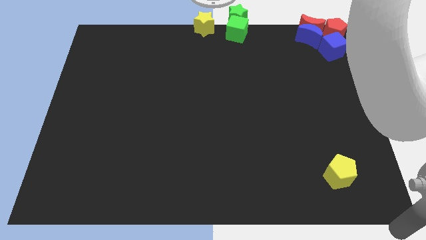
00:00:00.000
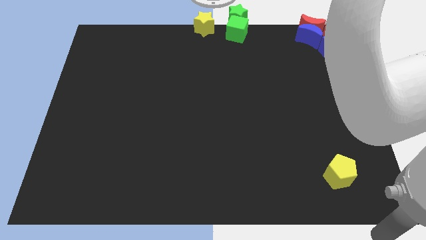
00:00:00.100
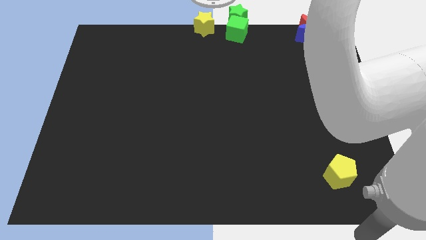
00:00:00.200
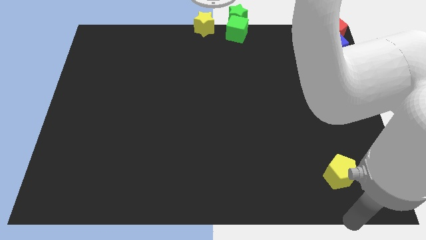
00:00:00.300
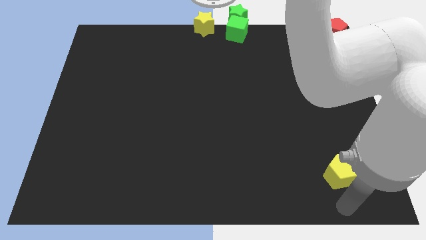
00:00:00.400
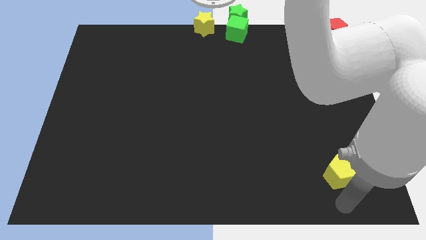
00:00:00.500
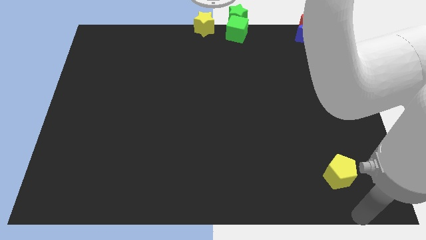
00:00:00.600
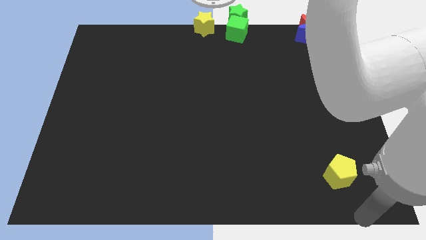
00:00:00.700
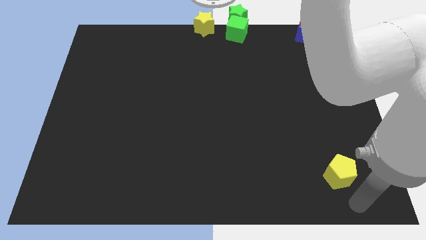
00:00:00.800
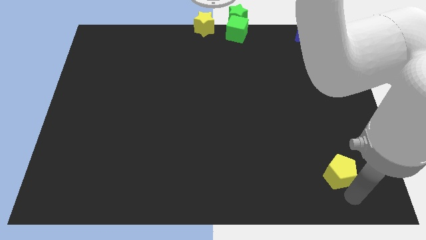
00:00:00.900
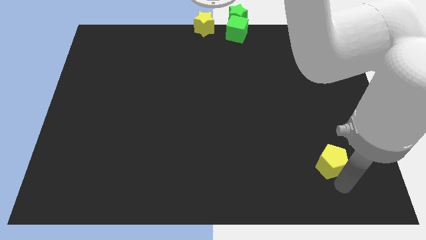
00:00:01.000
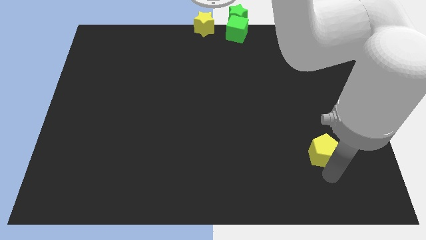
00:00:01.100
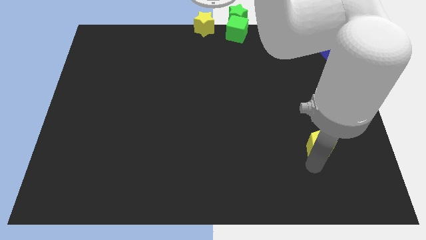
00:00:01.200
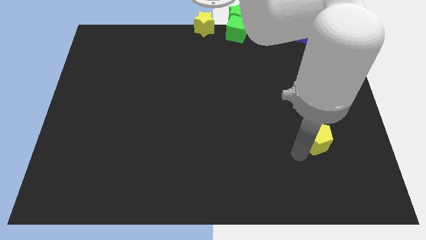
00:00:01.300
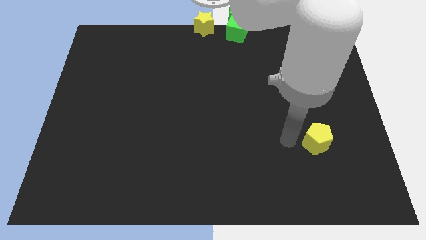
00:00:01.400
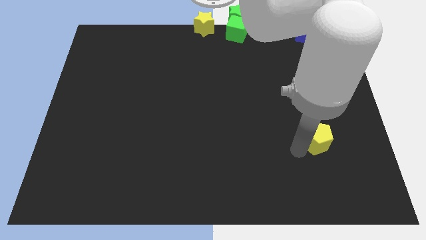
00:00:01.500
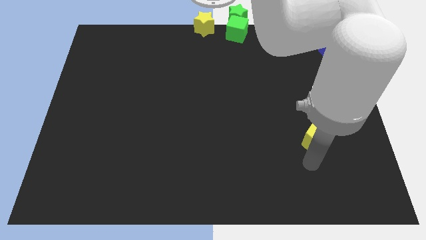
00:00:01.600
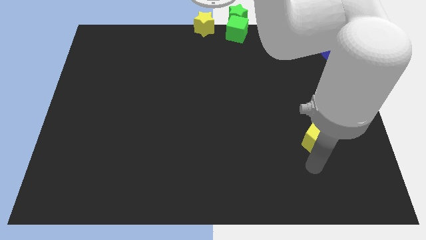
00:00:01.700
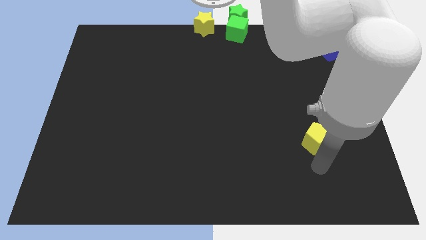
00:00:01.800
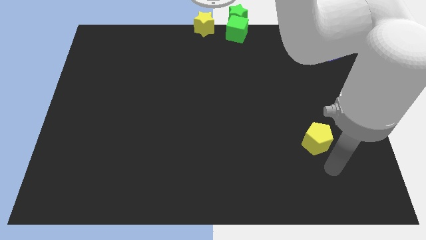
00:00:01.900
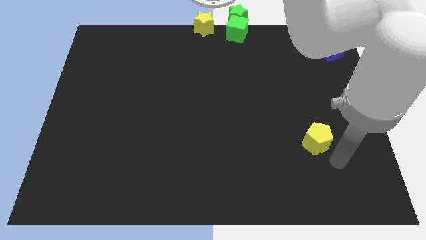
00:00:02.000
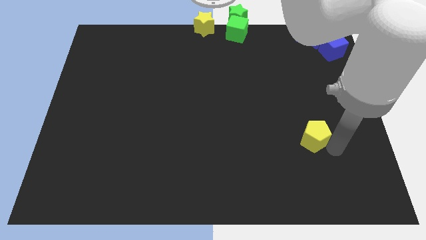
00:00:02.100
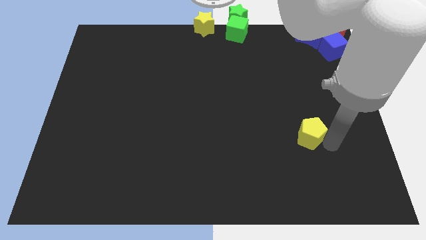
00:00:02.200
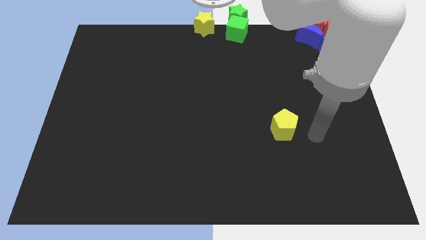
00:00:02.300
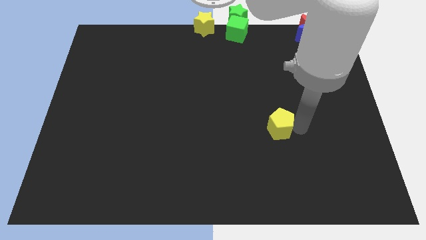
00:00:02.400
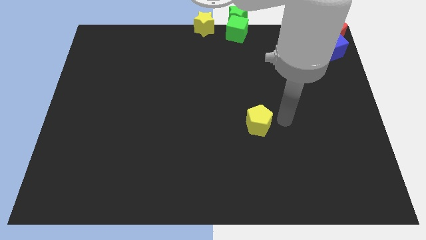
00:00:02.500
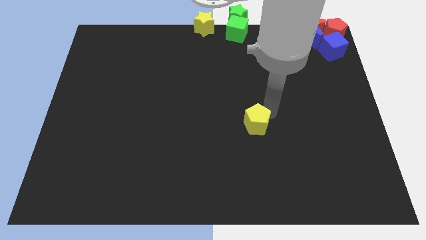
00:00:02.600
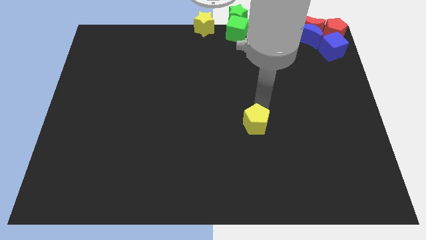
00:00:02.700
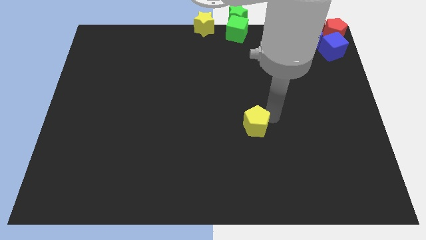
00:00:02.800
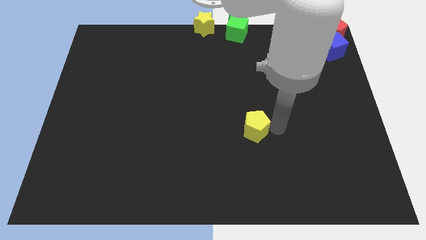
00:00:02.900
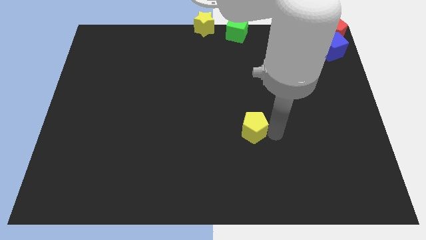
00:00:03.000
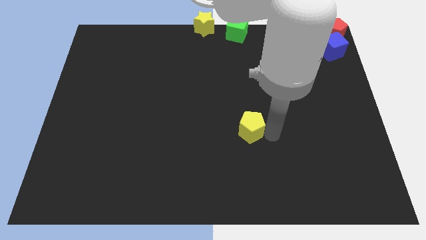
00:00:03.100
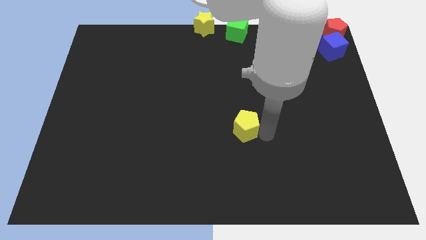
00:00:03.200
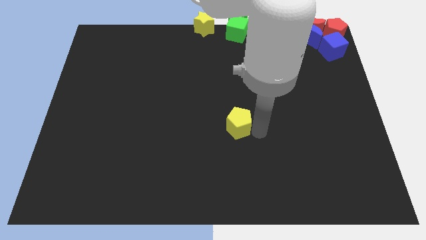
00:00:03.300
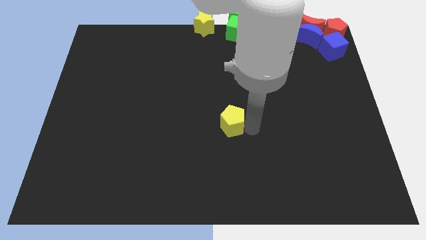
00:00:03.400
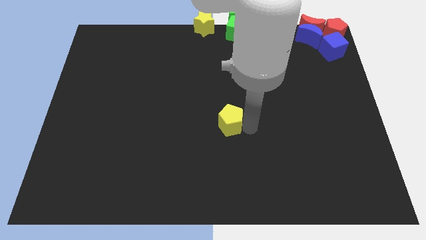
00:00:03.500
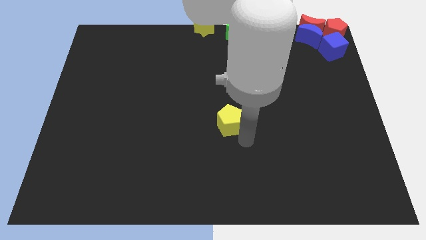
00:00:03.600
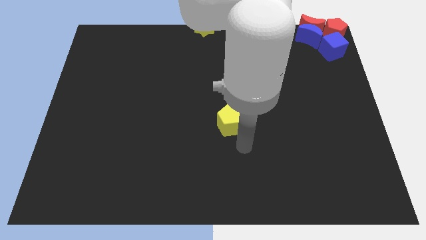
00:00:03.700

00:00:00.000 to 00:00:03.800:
push the yellow pentagon to the center of the board

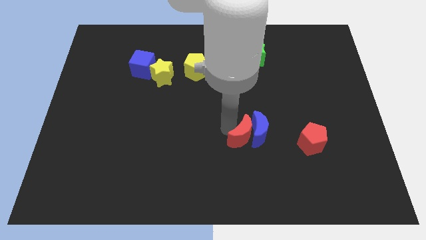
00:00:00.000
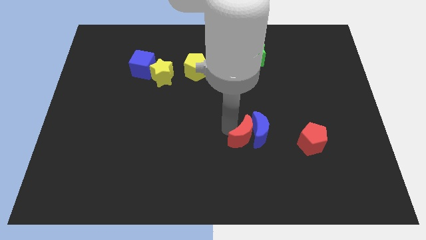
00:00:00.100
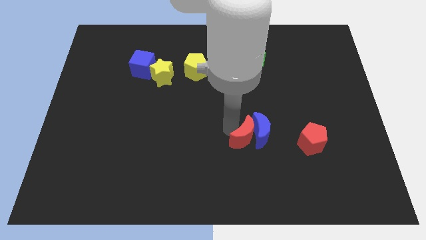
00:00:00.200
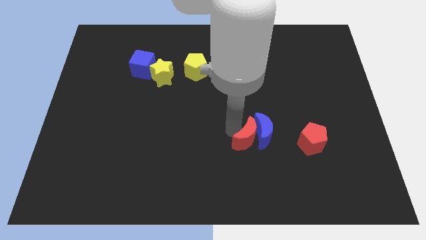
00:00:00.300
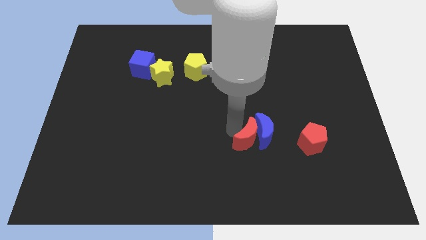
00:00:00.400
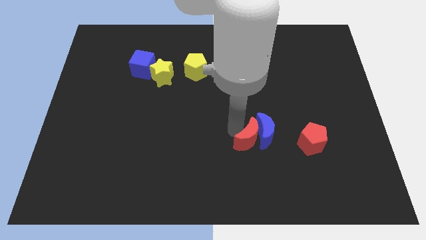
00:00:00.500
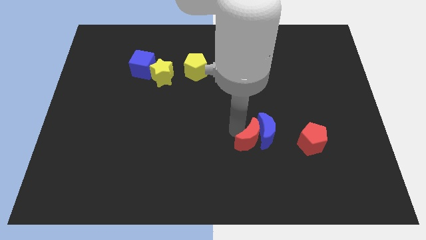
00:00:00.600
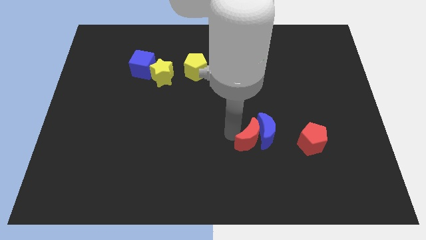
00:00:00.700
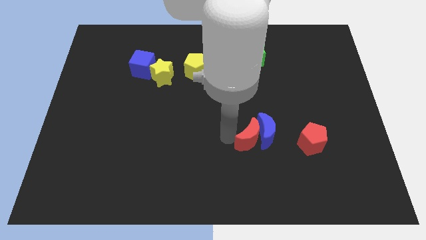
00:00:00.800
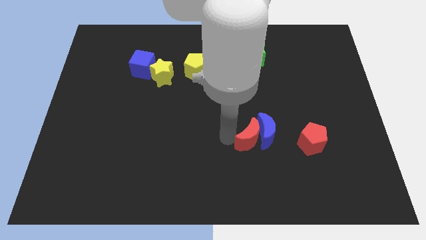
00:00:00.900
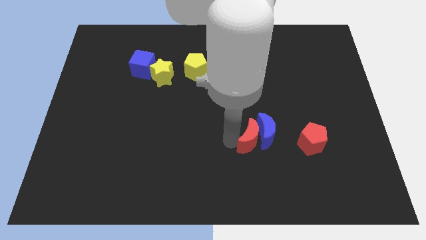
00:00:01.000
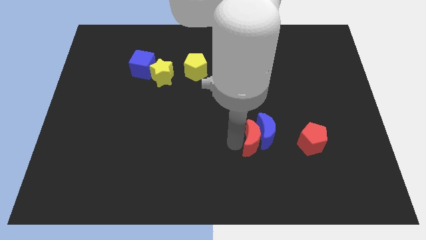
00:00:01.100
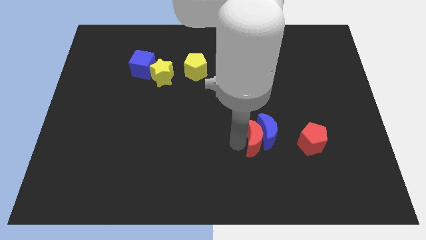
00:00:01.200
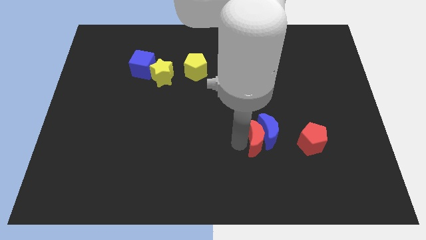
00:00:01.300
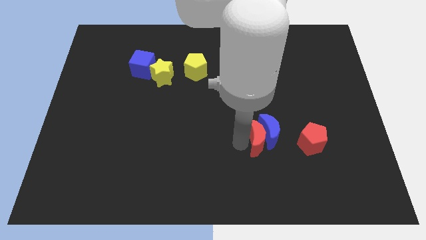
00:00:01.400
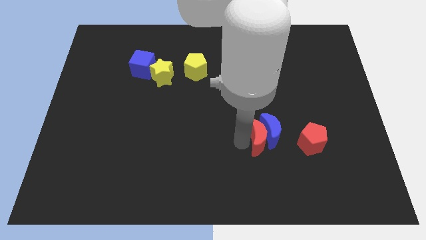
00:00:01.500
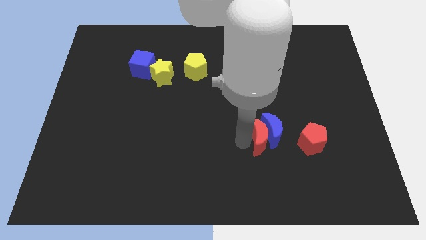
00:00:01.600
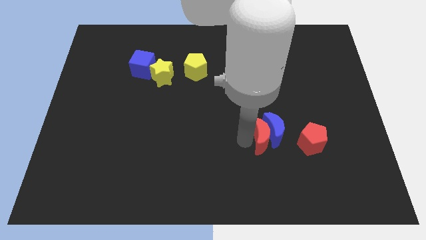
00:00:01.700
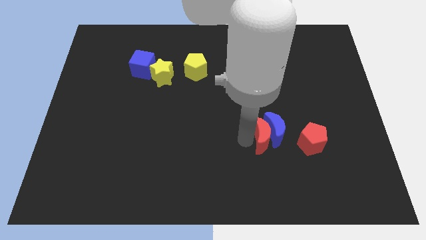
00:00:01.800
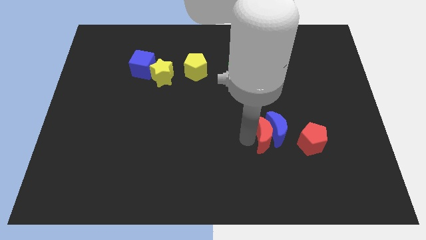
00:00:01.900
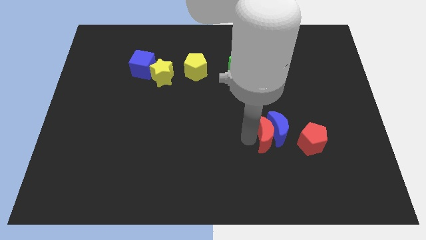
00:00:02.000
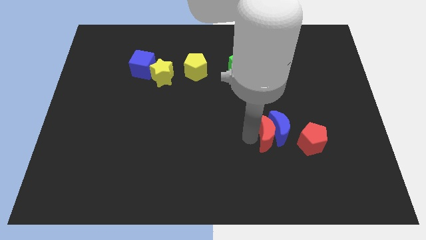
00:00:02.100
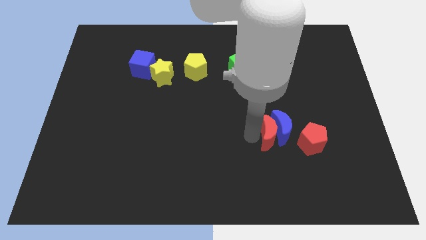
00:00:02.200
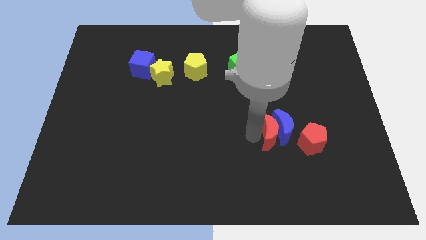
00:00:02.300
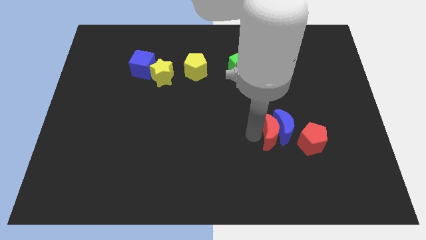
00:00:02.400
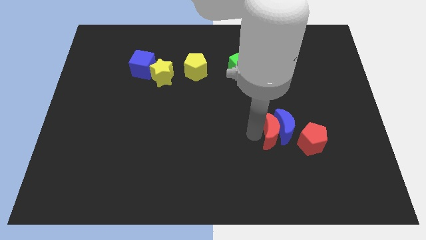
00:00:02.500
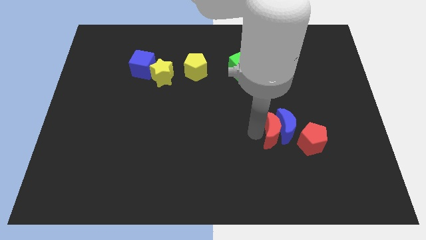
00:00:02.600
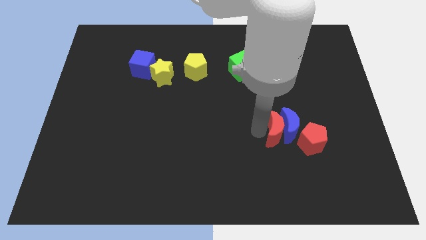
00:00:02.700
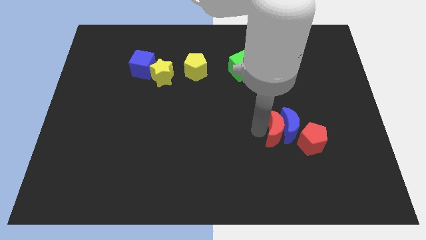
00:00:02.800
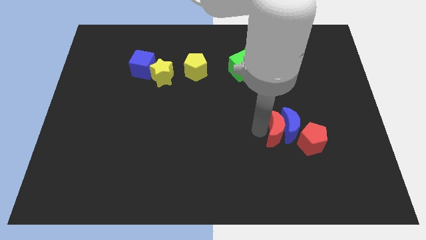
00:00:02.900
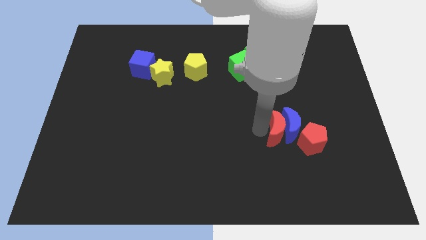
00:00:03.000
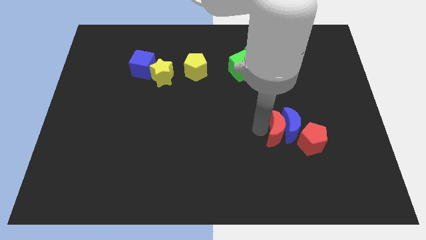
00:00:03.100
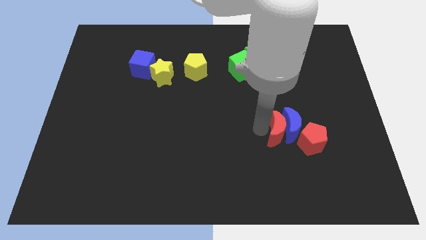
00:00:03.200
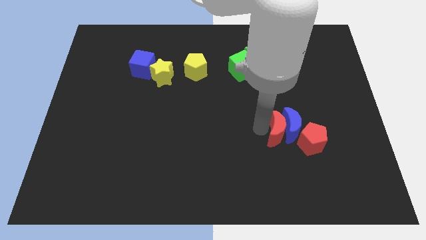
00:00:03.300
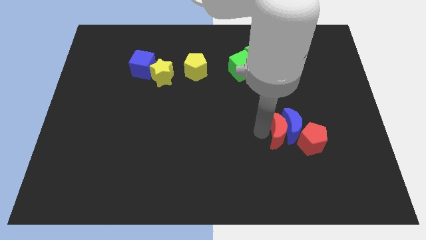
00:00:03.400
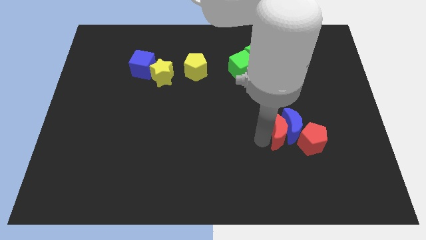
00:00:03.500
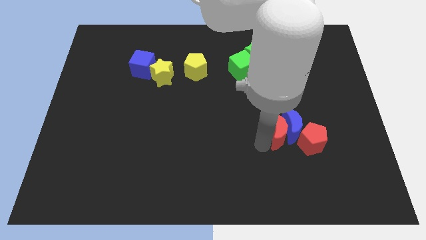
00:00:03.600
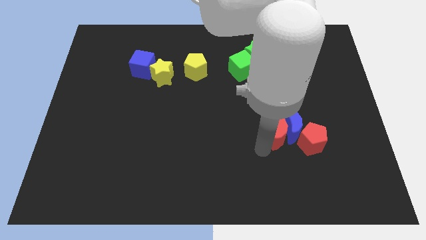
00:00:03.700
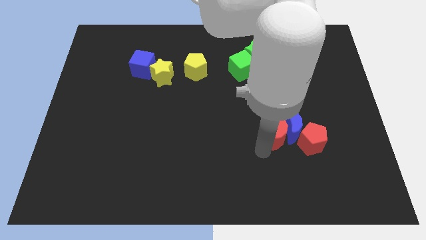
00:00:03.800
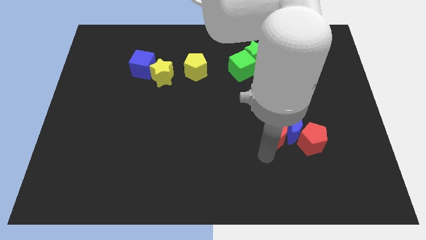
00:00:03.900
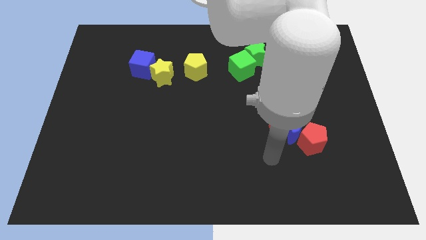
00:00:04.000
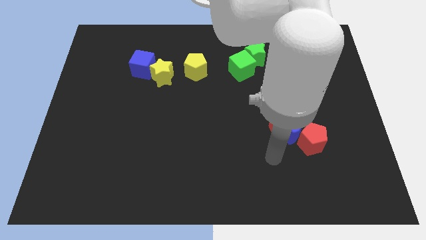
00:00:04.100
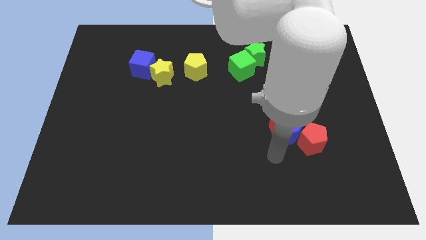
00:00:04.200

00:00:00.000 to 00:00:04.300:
push the red crescent along with blue crescent to the top left of the red pentagon

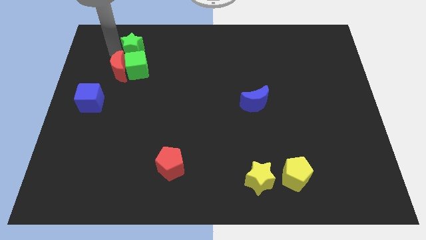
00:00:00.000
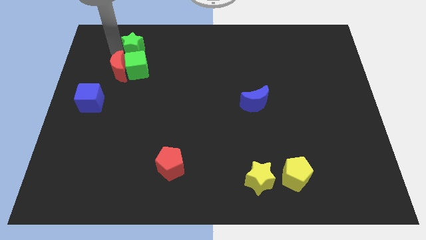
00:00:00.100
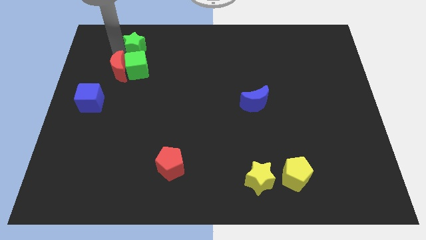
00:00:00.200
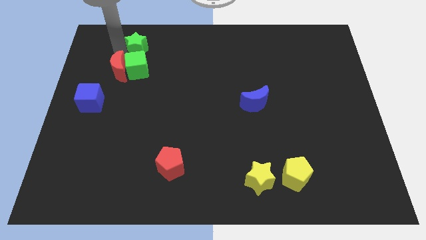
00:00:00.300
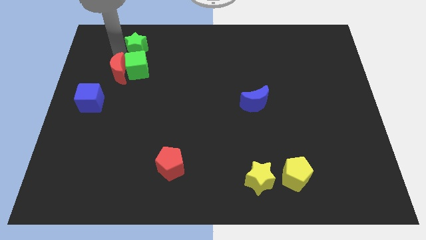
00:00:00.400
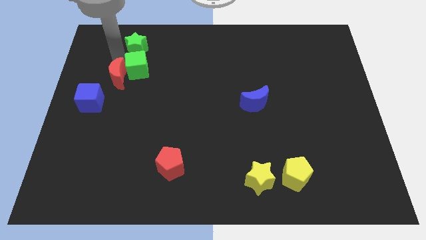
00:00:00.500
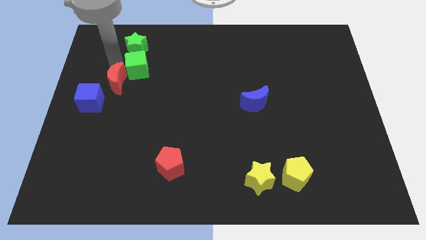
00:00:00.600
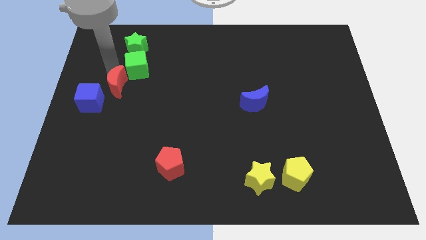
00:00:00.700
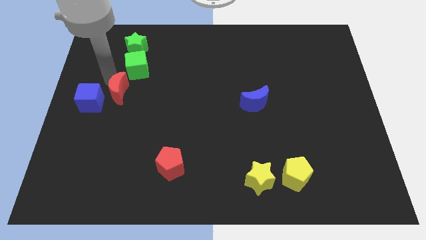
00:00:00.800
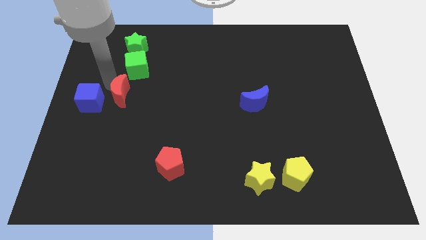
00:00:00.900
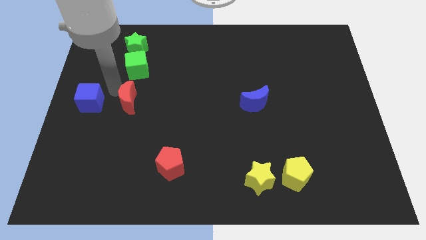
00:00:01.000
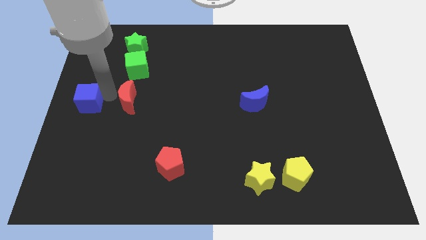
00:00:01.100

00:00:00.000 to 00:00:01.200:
place the red crescent below the green cube
